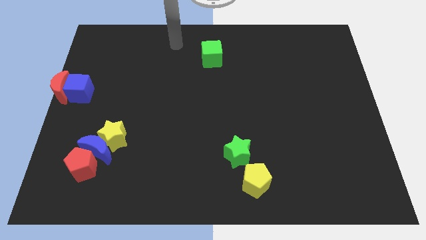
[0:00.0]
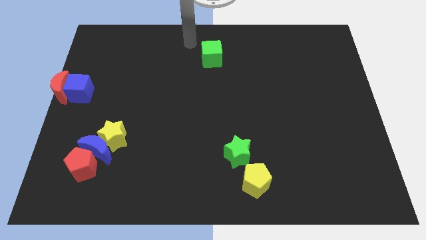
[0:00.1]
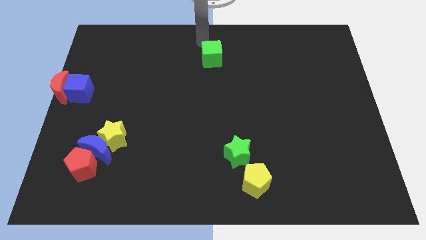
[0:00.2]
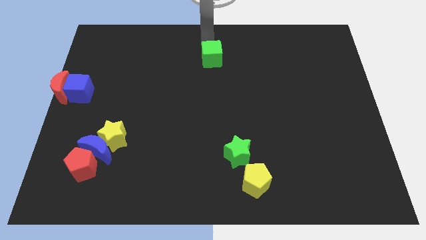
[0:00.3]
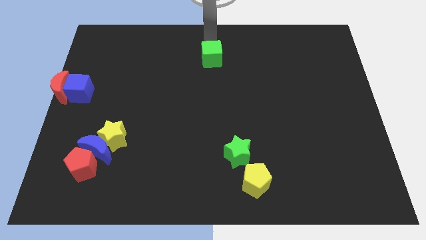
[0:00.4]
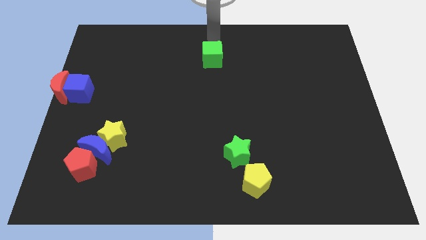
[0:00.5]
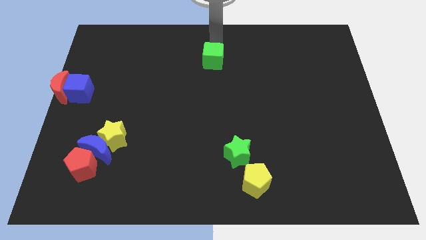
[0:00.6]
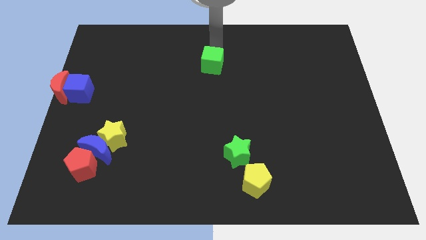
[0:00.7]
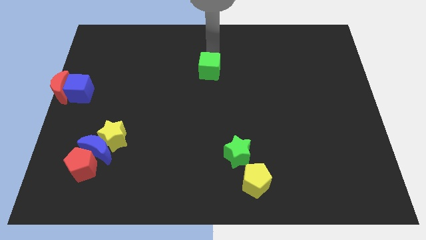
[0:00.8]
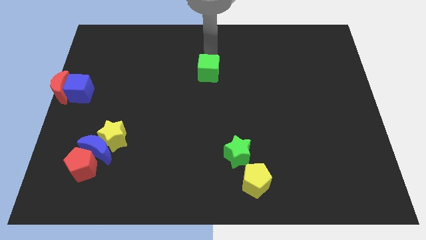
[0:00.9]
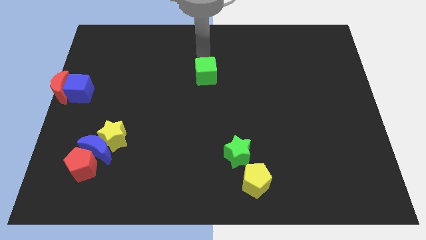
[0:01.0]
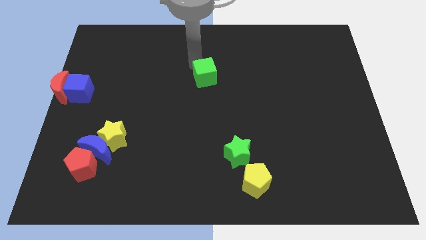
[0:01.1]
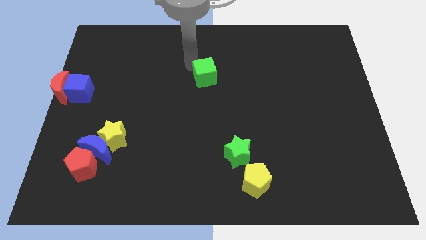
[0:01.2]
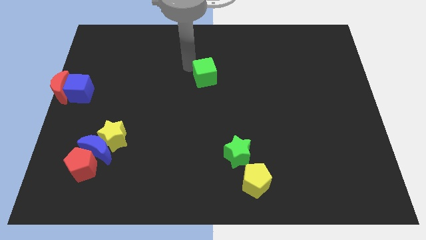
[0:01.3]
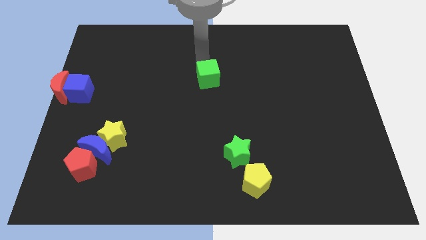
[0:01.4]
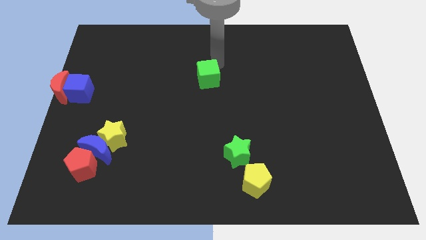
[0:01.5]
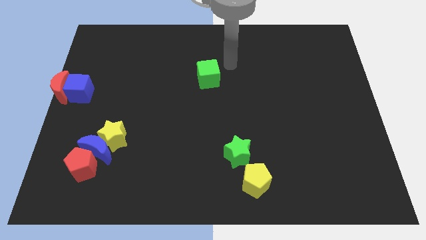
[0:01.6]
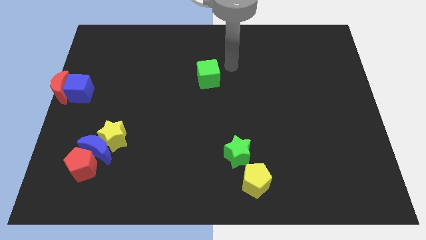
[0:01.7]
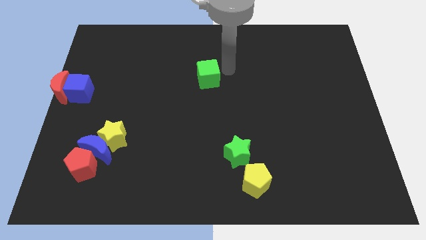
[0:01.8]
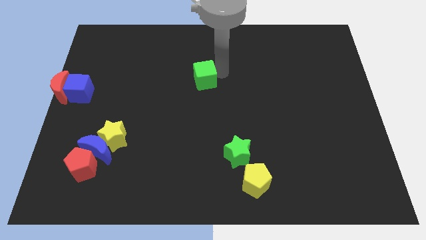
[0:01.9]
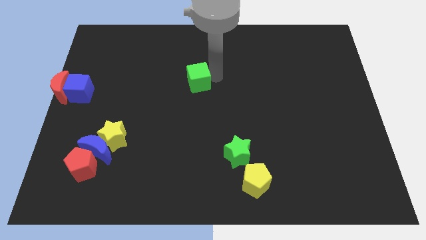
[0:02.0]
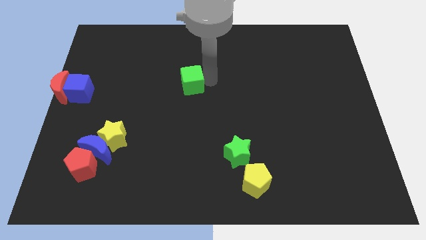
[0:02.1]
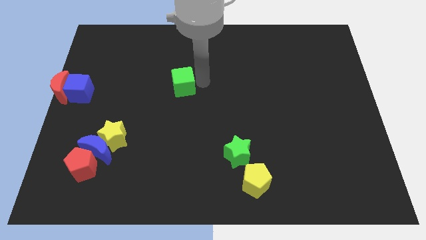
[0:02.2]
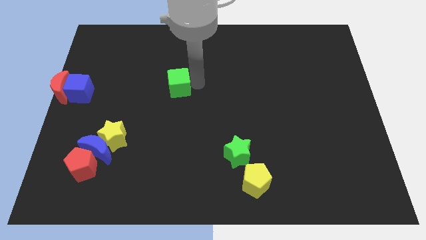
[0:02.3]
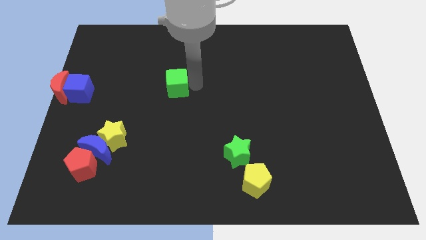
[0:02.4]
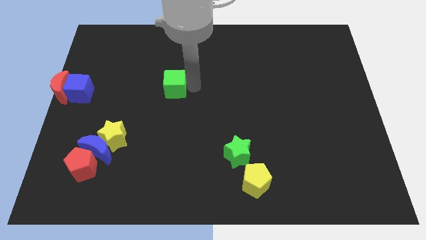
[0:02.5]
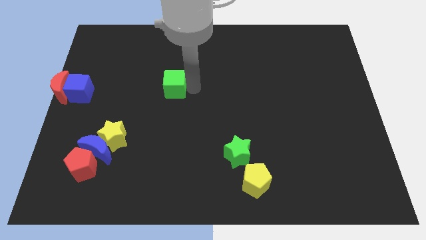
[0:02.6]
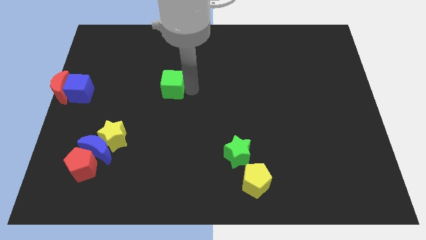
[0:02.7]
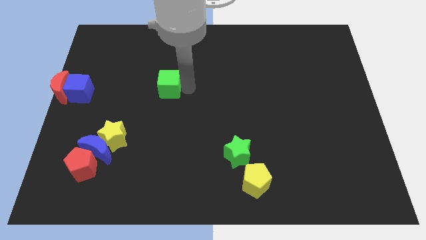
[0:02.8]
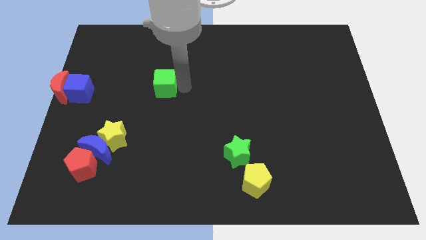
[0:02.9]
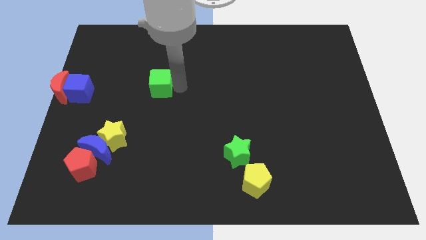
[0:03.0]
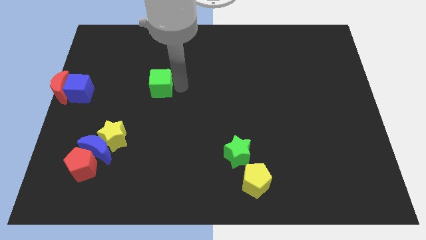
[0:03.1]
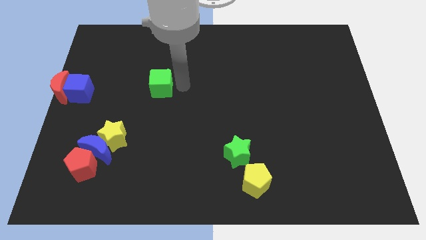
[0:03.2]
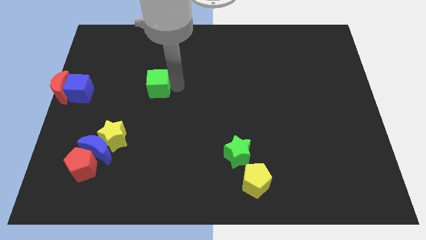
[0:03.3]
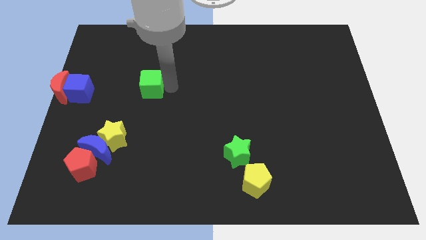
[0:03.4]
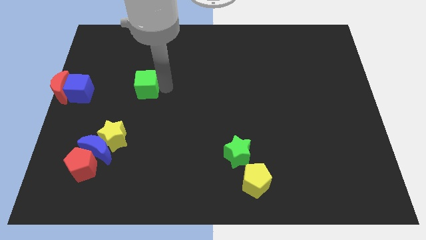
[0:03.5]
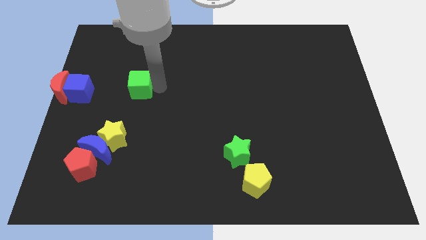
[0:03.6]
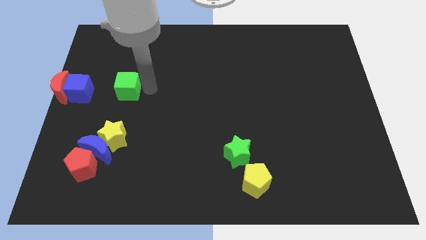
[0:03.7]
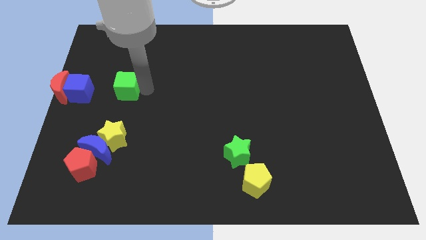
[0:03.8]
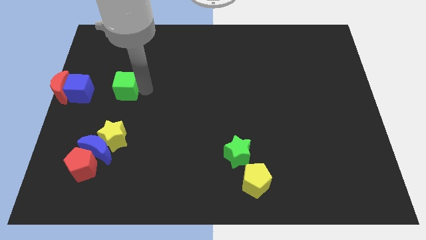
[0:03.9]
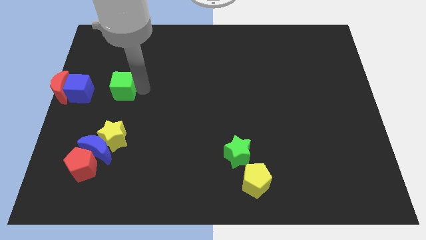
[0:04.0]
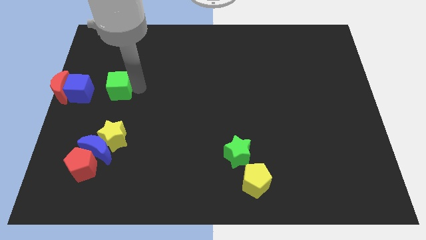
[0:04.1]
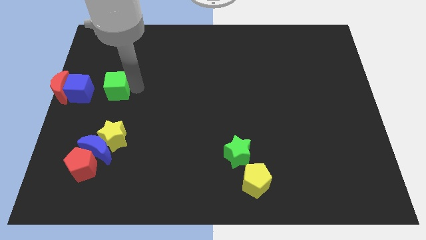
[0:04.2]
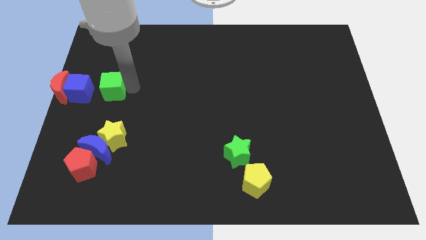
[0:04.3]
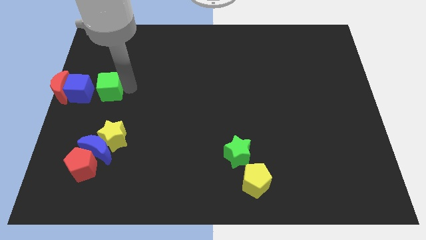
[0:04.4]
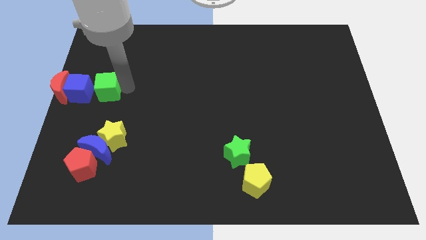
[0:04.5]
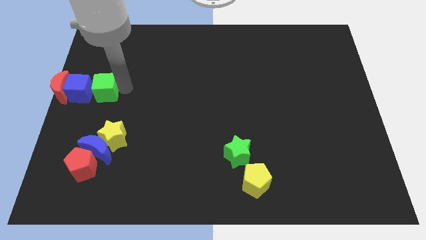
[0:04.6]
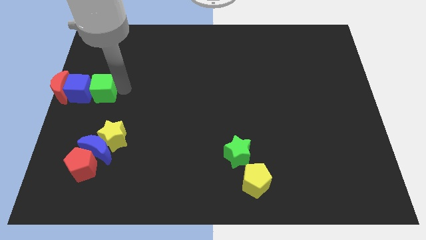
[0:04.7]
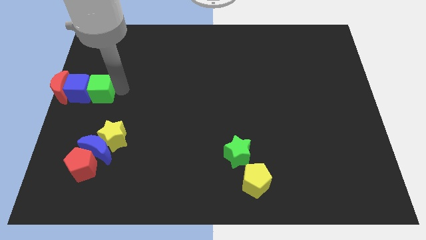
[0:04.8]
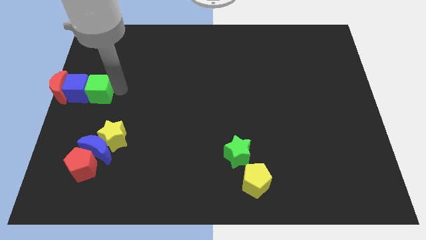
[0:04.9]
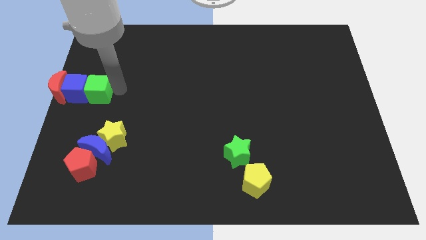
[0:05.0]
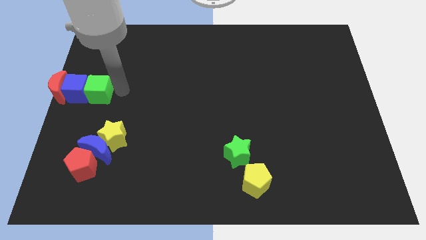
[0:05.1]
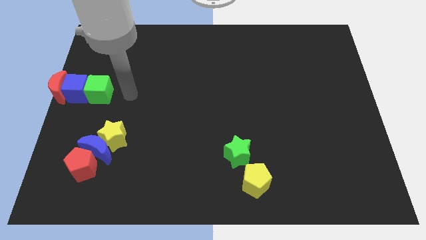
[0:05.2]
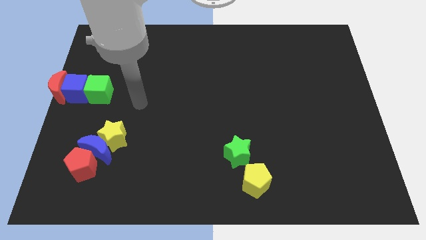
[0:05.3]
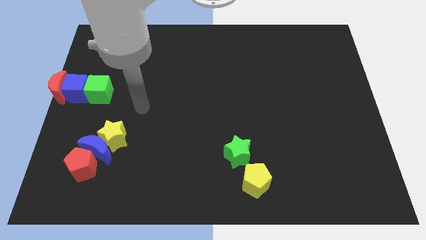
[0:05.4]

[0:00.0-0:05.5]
push the green cube into blue cube

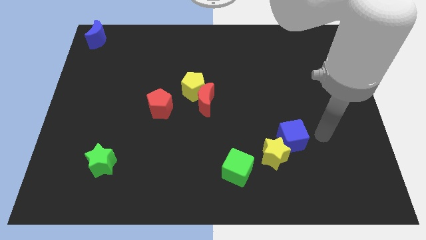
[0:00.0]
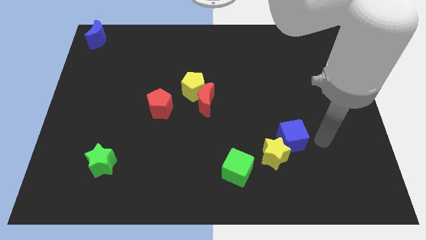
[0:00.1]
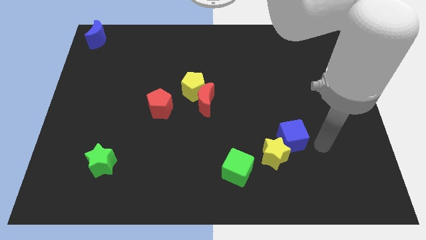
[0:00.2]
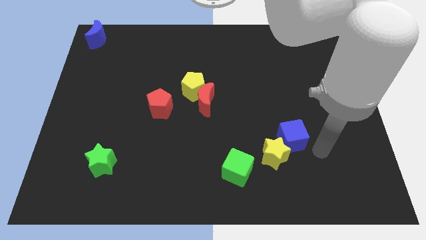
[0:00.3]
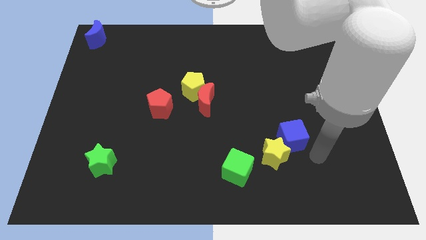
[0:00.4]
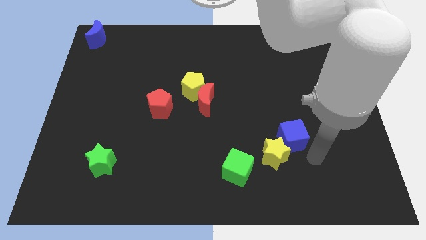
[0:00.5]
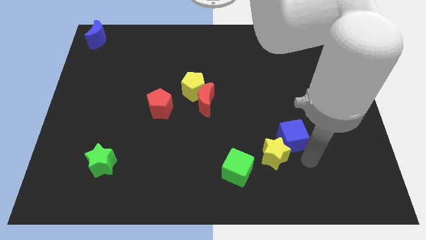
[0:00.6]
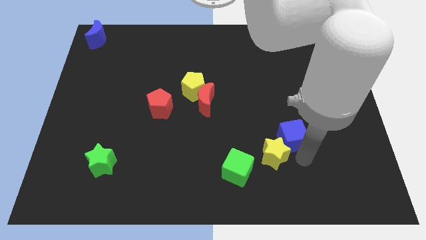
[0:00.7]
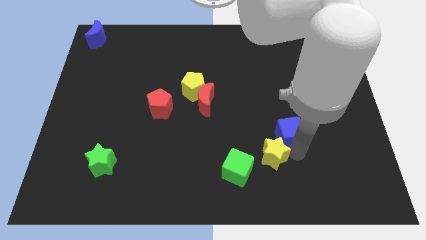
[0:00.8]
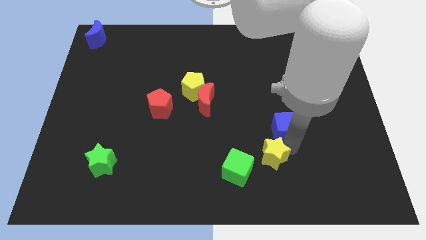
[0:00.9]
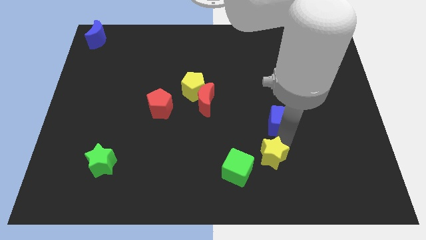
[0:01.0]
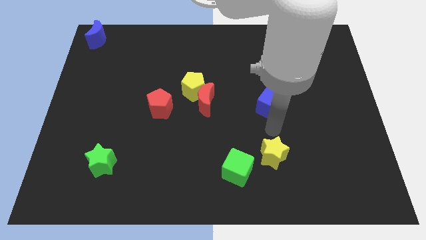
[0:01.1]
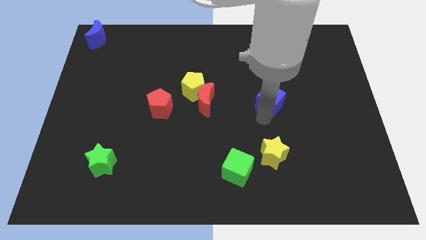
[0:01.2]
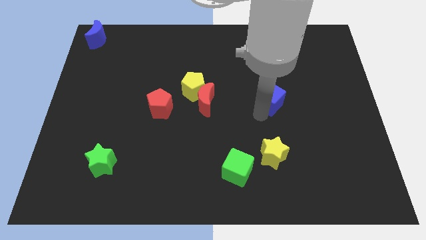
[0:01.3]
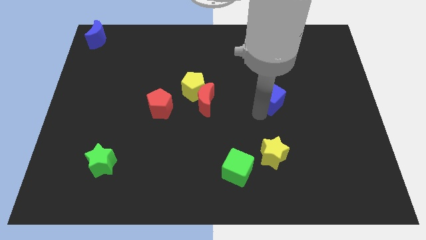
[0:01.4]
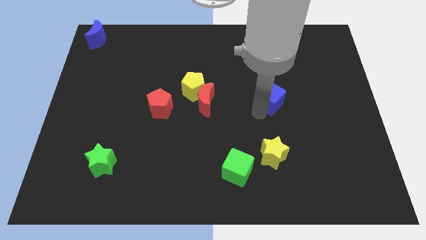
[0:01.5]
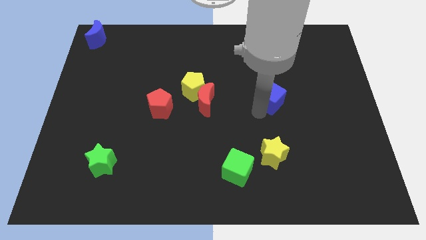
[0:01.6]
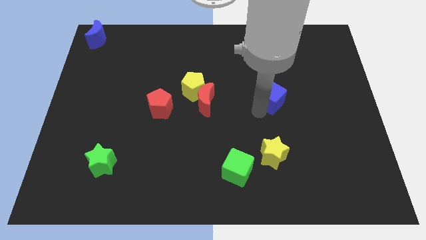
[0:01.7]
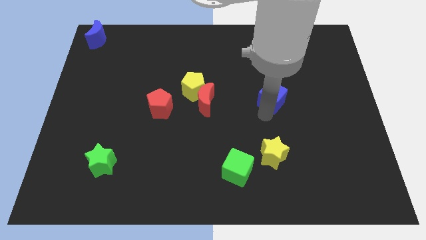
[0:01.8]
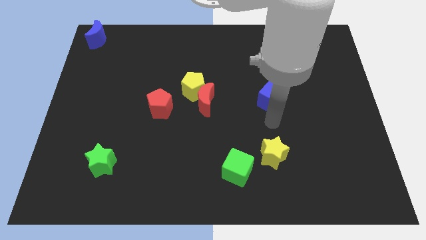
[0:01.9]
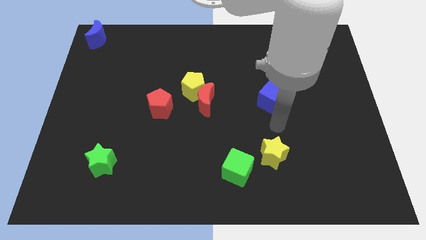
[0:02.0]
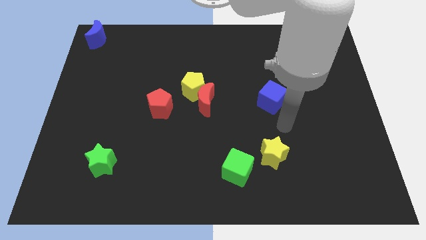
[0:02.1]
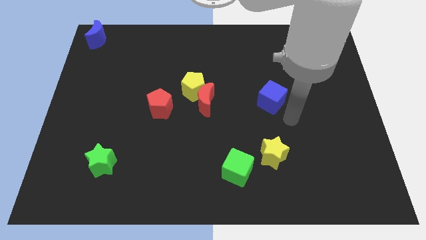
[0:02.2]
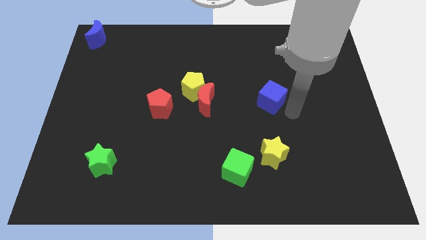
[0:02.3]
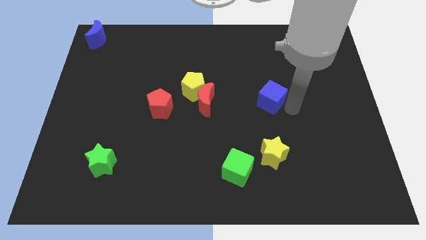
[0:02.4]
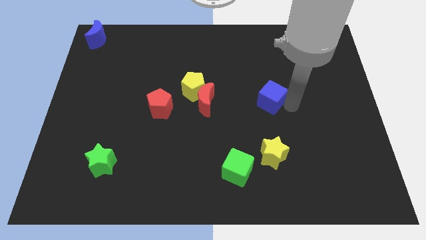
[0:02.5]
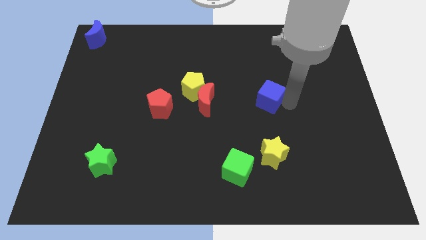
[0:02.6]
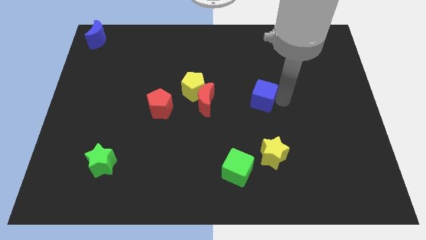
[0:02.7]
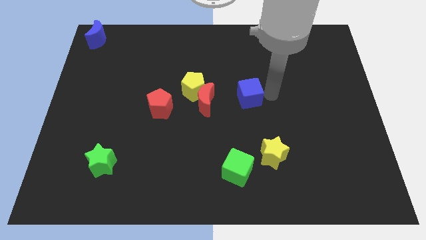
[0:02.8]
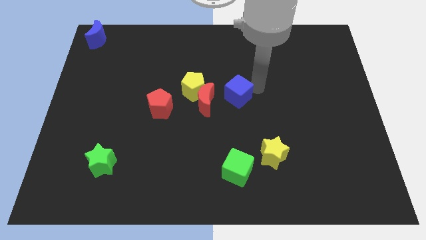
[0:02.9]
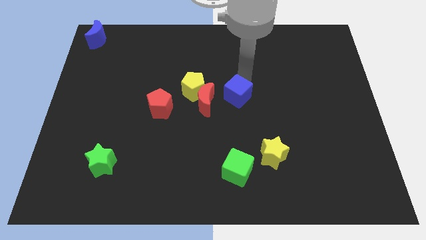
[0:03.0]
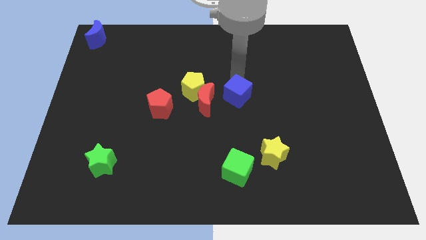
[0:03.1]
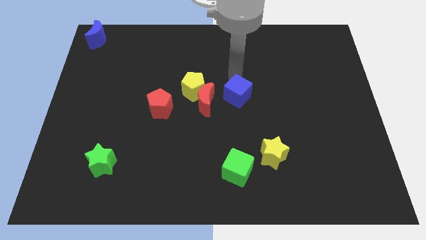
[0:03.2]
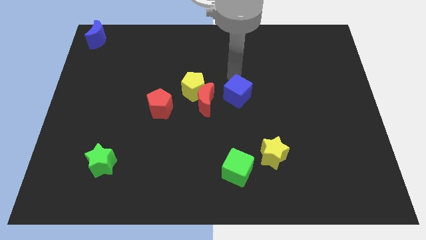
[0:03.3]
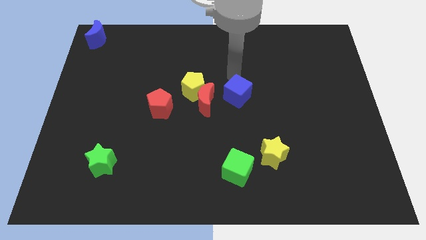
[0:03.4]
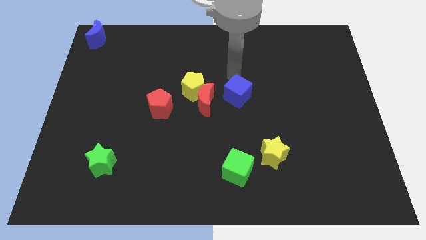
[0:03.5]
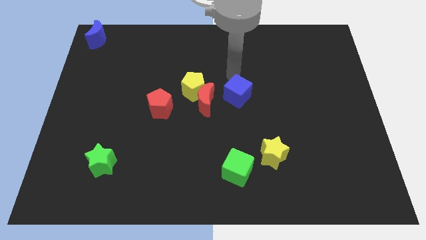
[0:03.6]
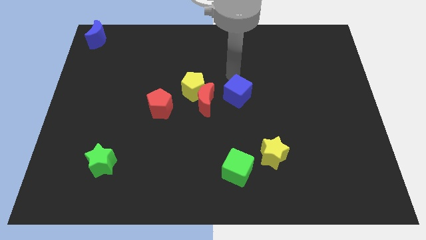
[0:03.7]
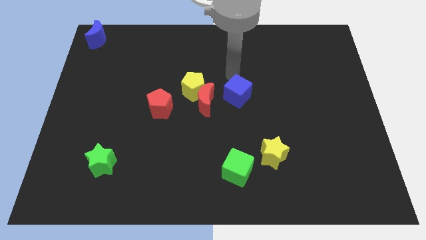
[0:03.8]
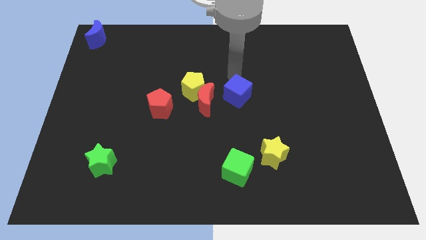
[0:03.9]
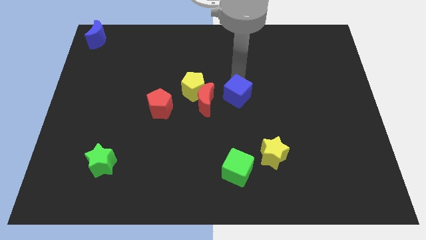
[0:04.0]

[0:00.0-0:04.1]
separate the blue cube from the yellow star
